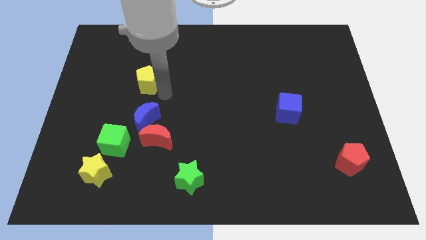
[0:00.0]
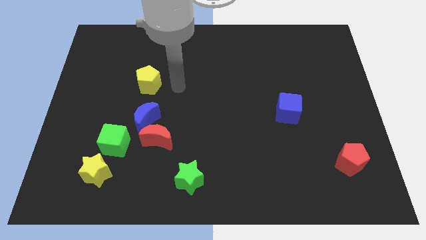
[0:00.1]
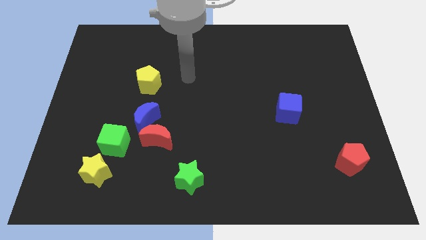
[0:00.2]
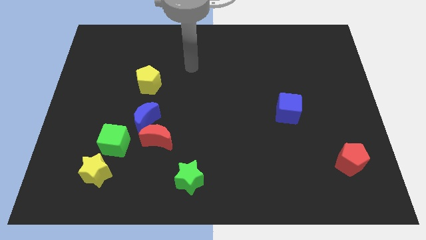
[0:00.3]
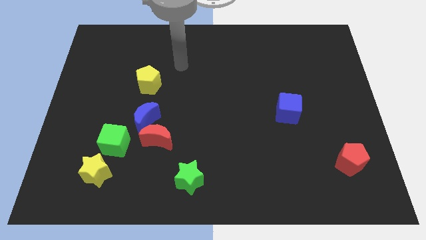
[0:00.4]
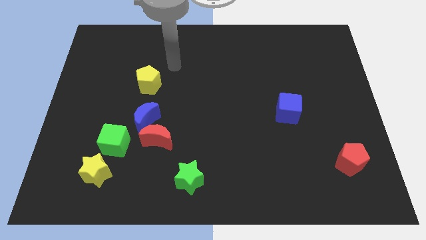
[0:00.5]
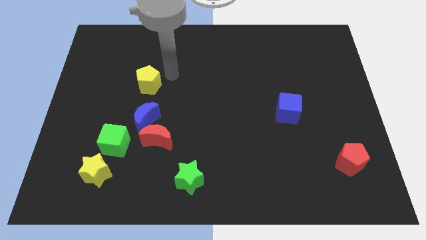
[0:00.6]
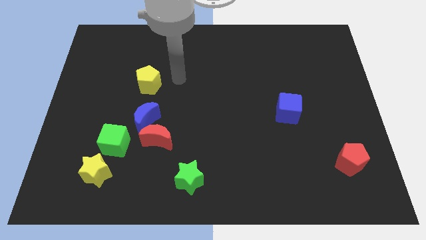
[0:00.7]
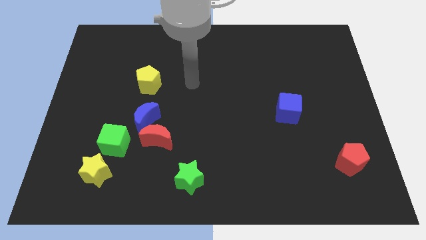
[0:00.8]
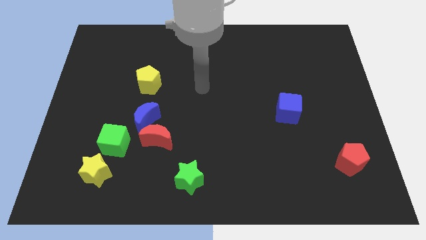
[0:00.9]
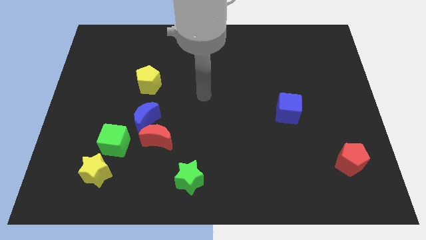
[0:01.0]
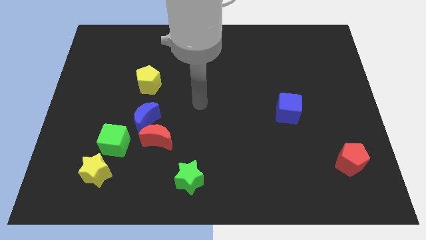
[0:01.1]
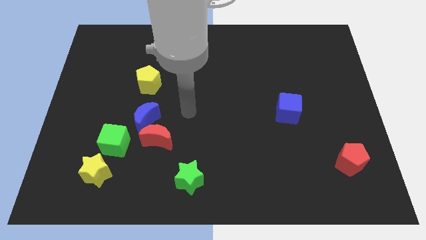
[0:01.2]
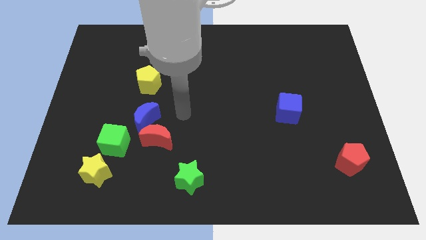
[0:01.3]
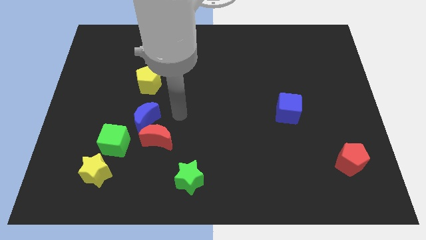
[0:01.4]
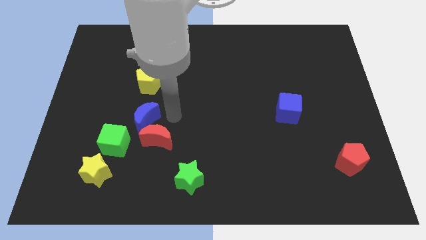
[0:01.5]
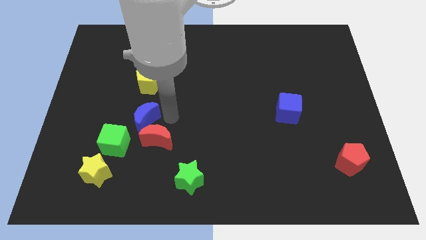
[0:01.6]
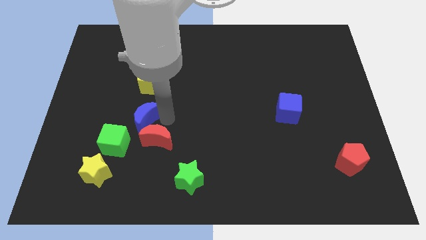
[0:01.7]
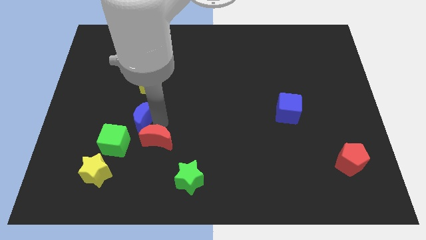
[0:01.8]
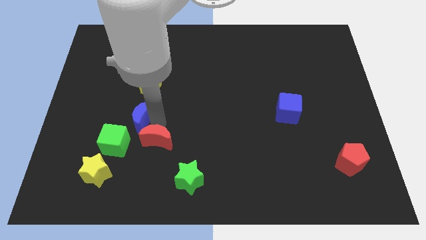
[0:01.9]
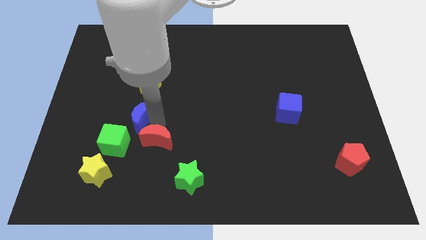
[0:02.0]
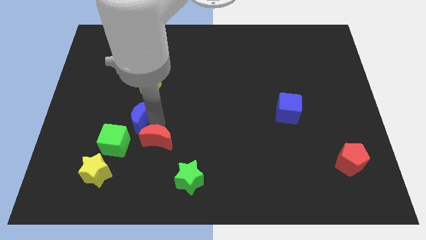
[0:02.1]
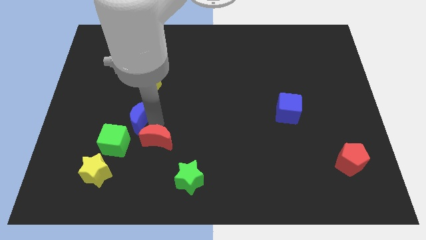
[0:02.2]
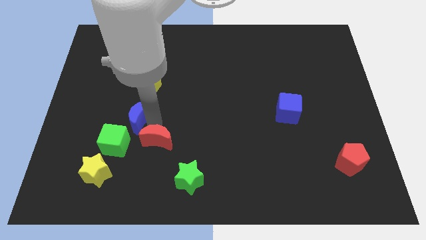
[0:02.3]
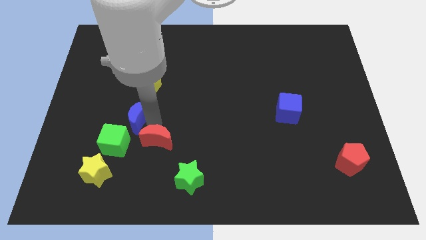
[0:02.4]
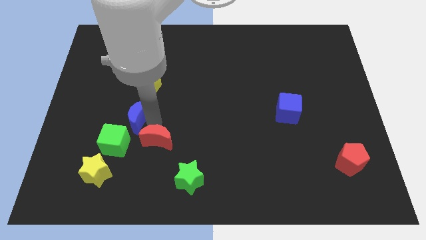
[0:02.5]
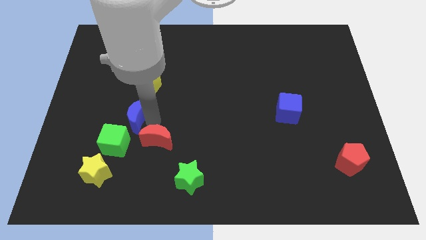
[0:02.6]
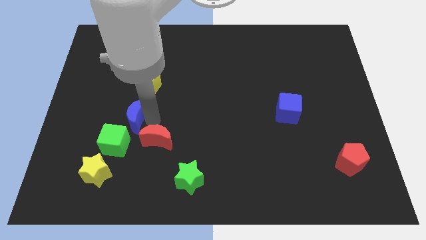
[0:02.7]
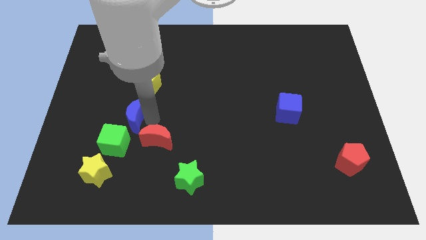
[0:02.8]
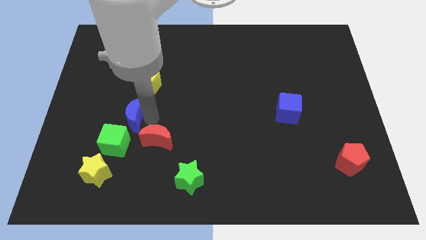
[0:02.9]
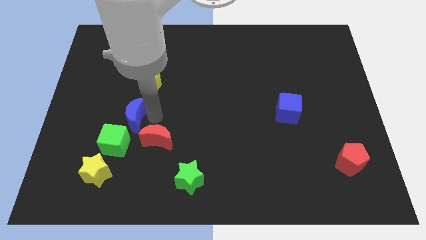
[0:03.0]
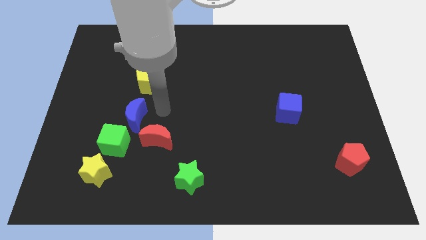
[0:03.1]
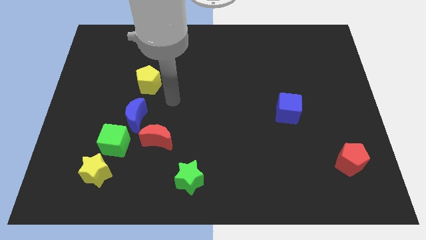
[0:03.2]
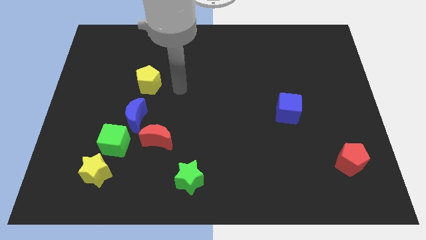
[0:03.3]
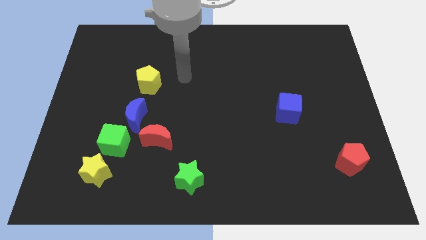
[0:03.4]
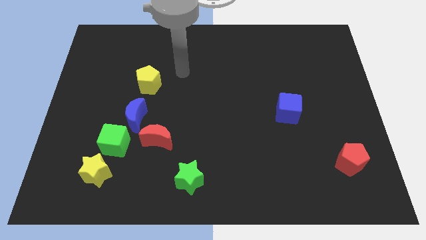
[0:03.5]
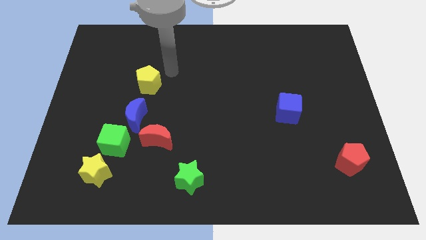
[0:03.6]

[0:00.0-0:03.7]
slightly push blue moon towards left center

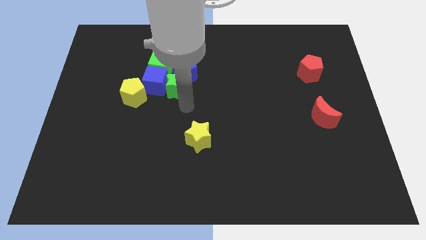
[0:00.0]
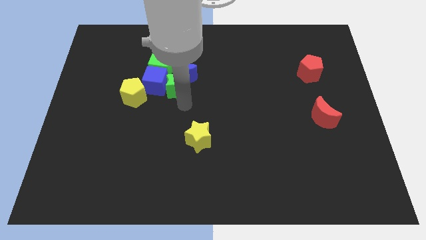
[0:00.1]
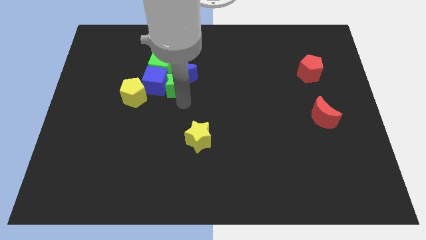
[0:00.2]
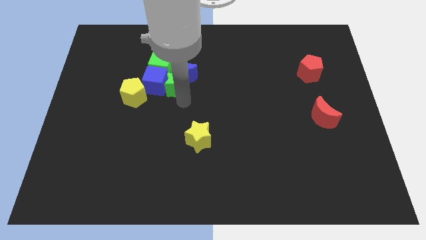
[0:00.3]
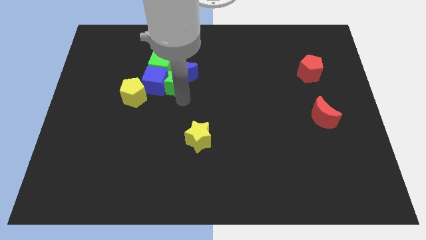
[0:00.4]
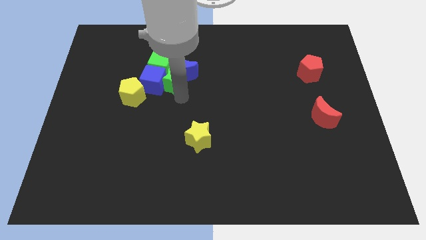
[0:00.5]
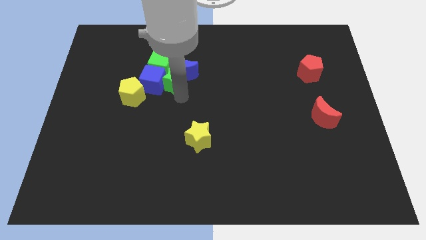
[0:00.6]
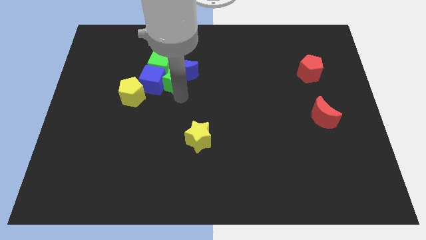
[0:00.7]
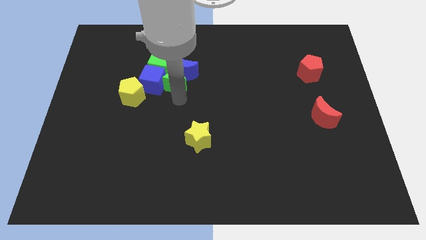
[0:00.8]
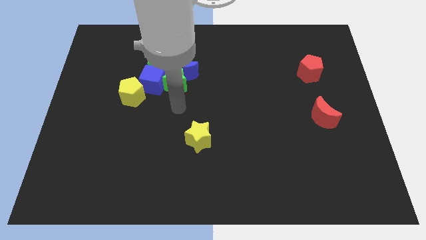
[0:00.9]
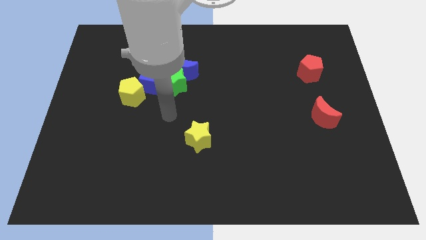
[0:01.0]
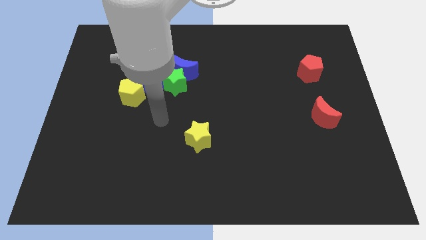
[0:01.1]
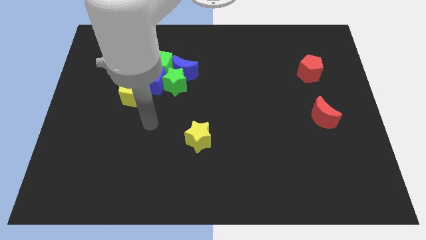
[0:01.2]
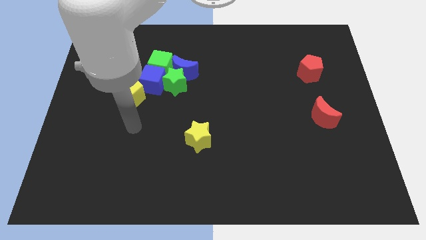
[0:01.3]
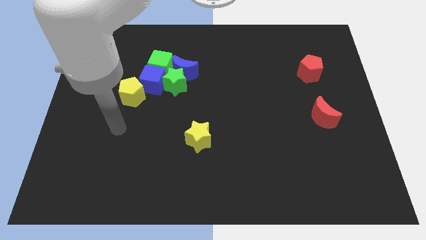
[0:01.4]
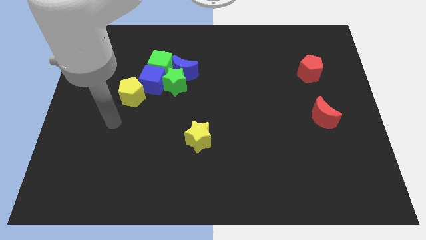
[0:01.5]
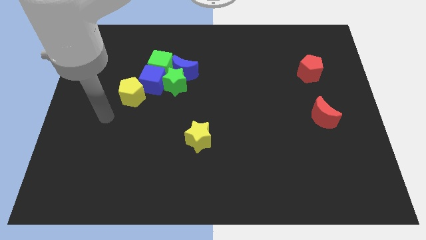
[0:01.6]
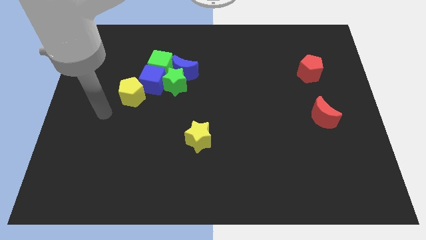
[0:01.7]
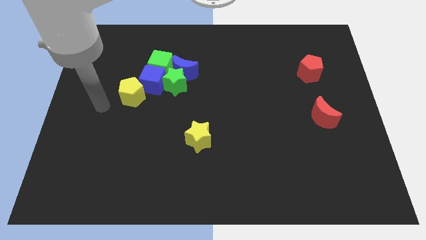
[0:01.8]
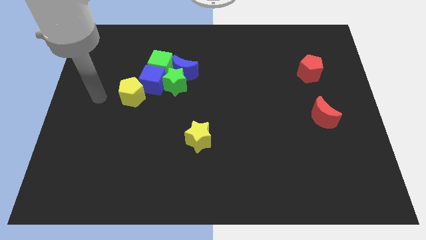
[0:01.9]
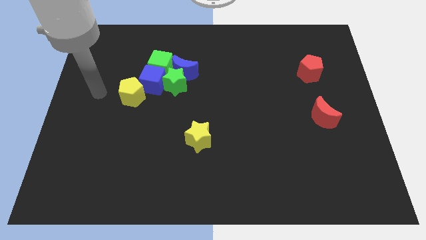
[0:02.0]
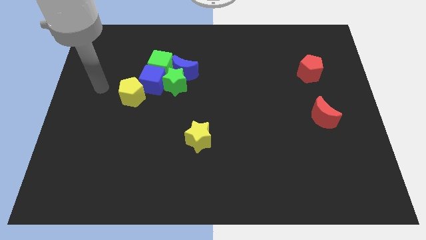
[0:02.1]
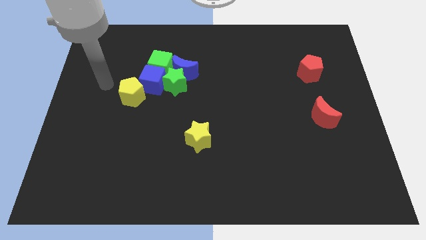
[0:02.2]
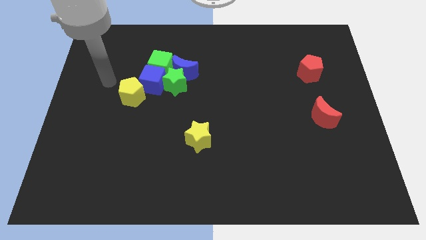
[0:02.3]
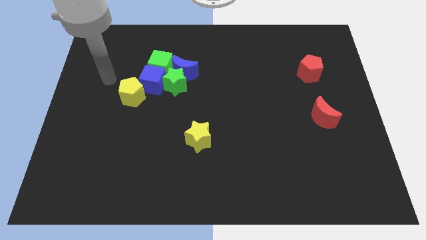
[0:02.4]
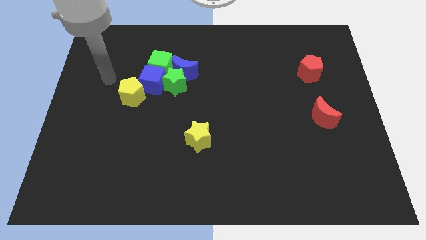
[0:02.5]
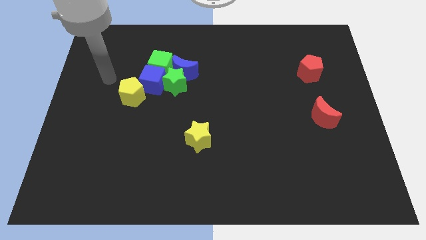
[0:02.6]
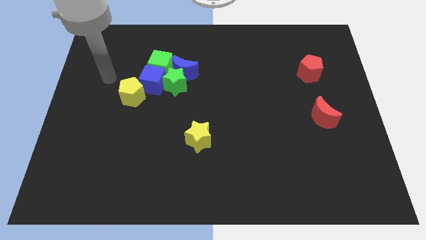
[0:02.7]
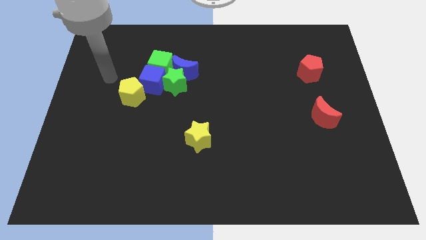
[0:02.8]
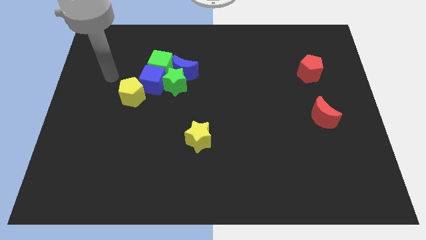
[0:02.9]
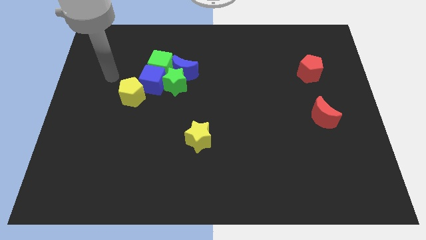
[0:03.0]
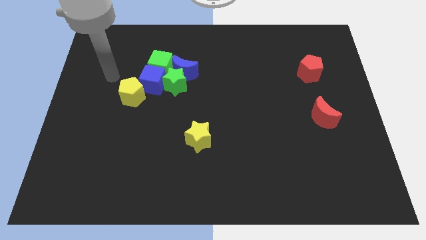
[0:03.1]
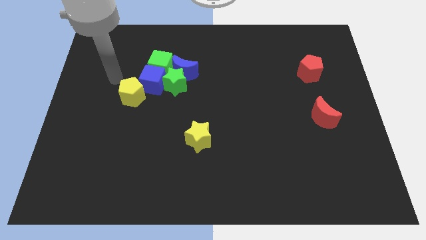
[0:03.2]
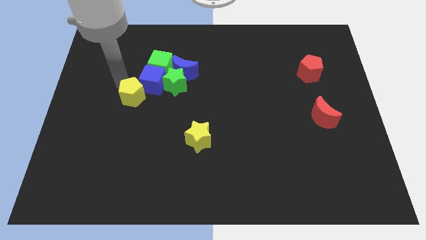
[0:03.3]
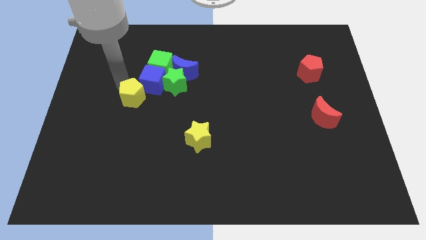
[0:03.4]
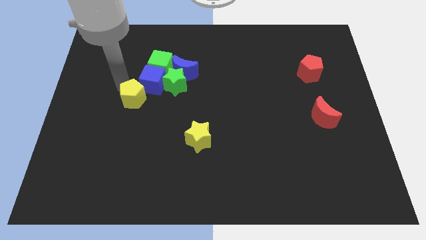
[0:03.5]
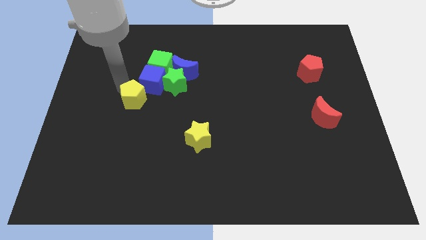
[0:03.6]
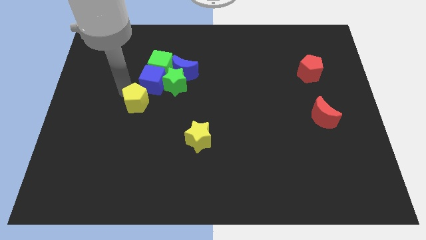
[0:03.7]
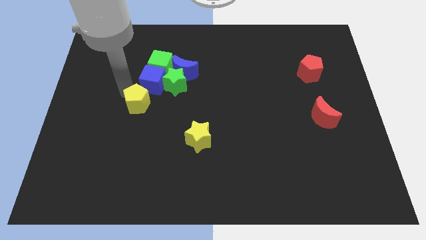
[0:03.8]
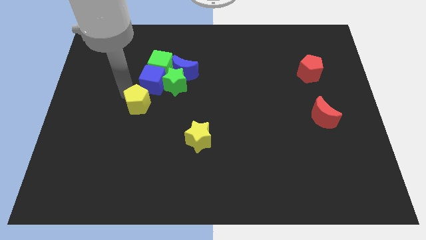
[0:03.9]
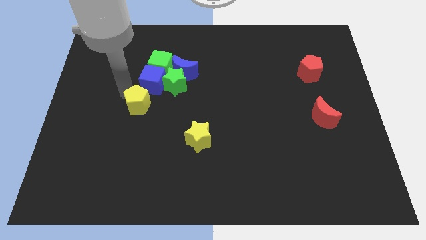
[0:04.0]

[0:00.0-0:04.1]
separate the yellow pentagon from the blue cube

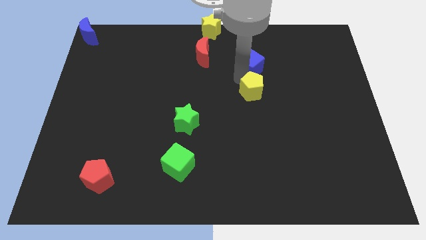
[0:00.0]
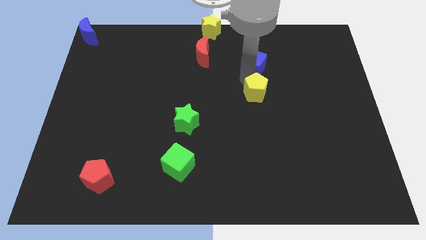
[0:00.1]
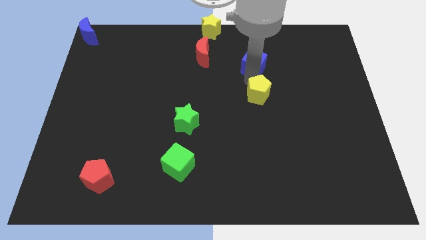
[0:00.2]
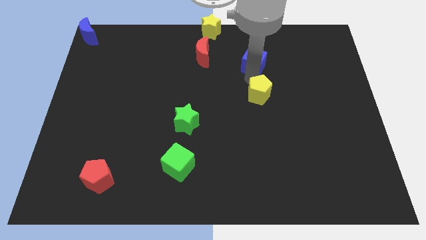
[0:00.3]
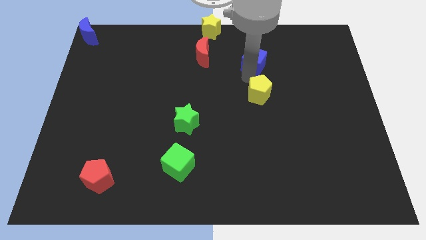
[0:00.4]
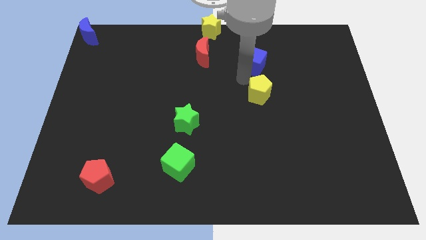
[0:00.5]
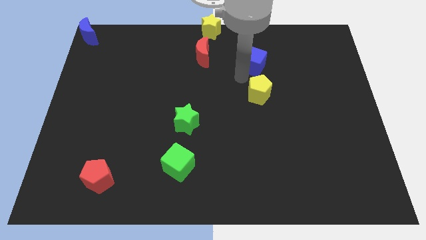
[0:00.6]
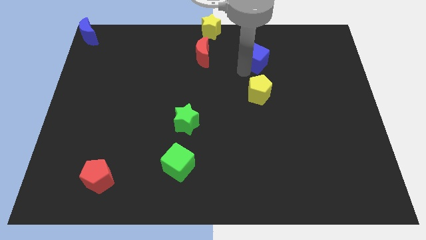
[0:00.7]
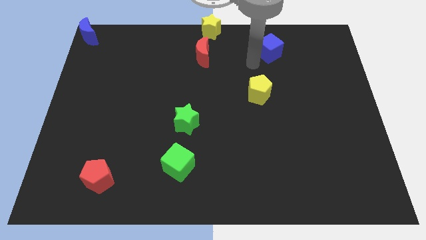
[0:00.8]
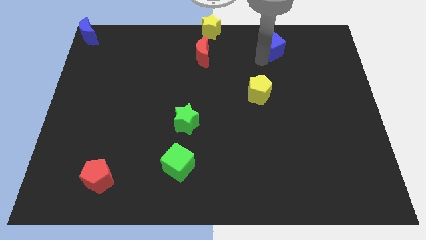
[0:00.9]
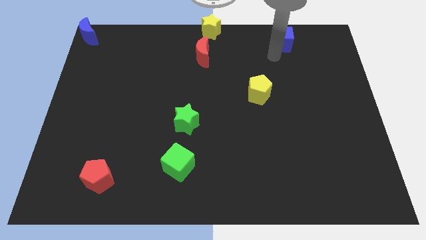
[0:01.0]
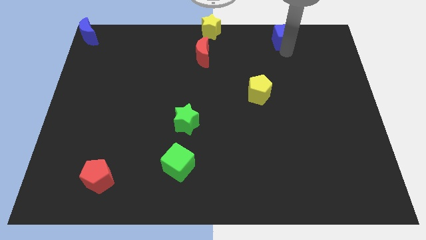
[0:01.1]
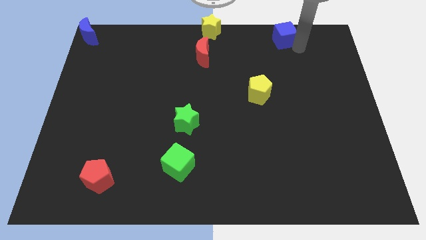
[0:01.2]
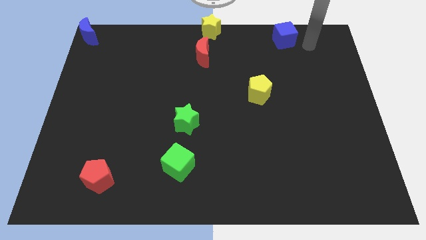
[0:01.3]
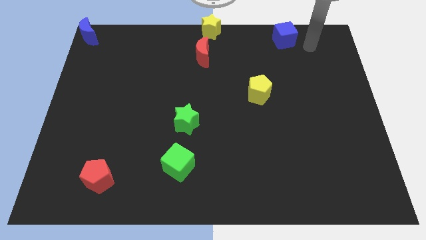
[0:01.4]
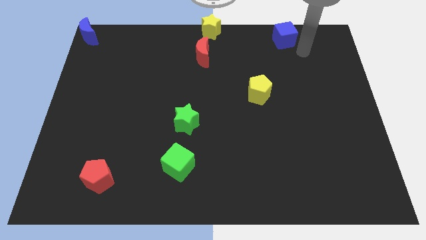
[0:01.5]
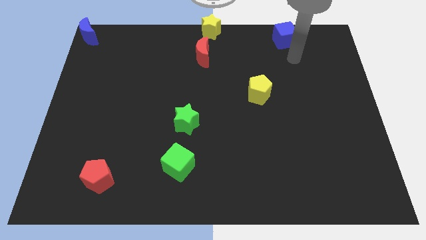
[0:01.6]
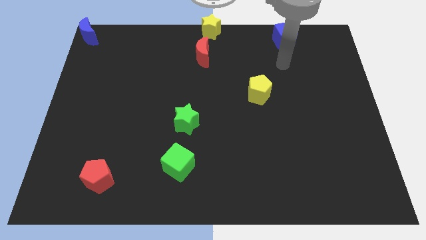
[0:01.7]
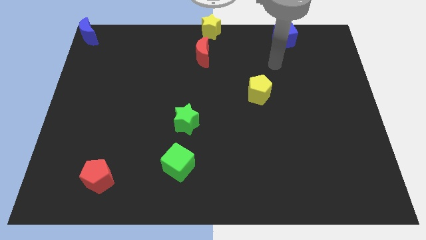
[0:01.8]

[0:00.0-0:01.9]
push the blue cube to the top
